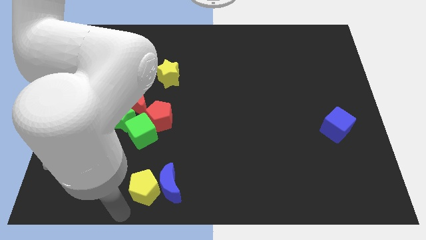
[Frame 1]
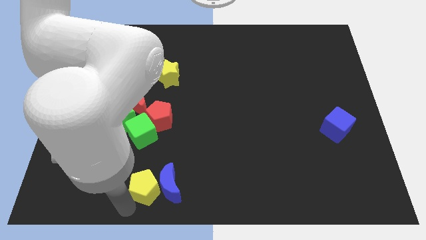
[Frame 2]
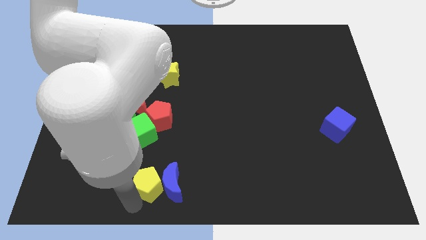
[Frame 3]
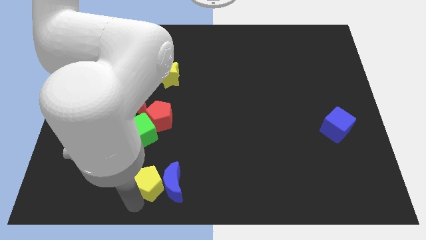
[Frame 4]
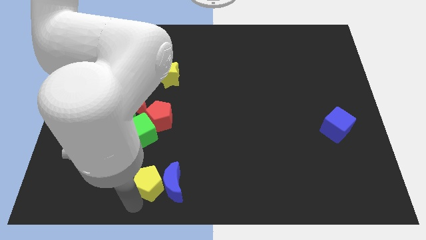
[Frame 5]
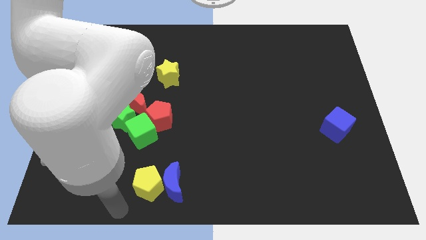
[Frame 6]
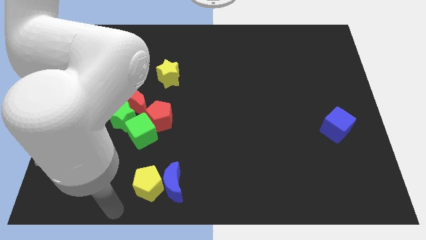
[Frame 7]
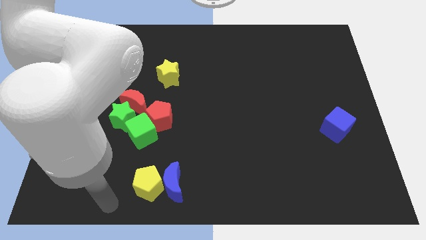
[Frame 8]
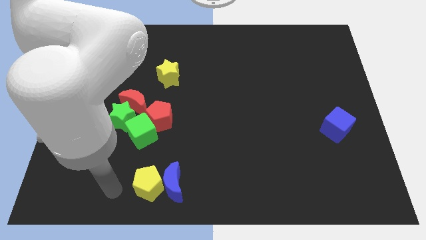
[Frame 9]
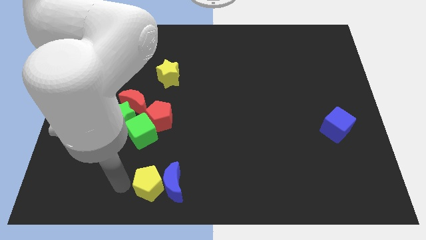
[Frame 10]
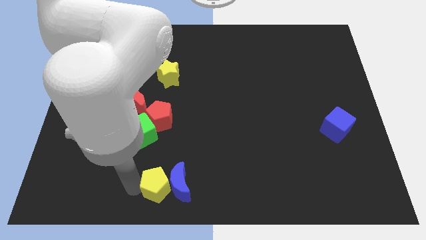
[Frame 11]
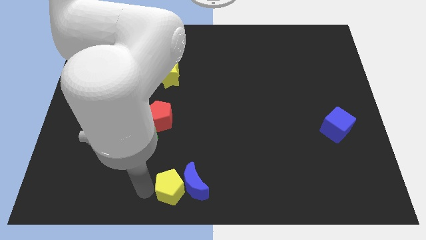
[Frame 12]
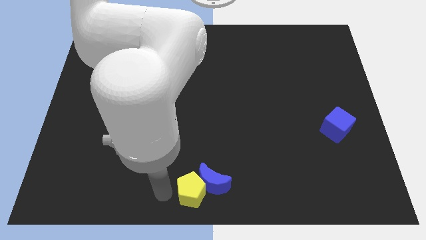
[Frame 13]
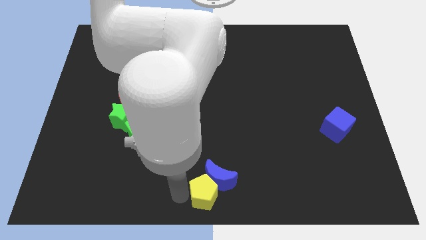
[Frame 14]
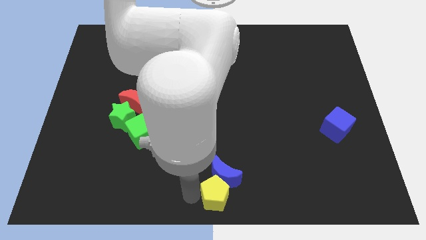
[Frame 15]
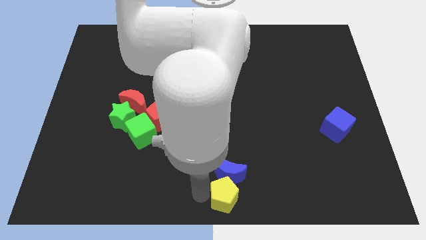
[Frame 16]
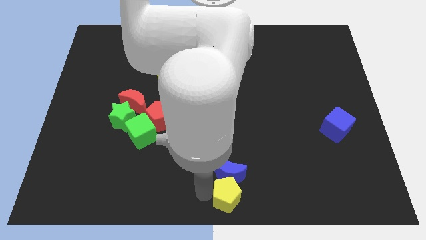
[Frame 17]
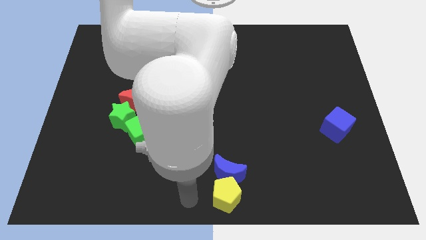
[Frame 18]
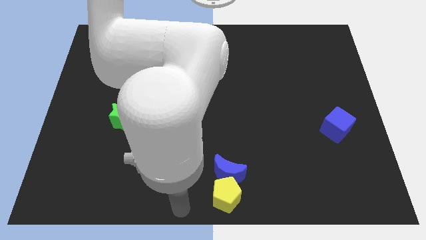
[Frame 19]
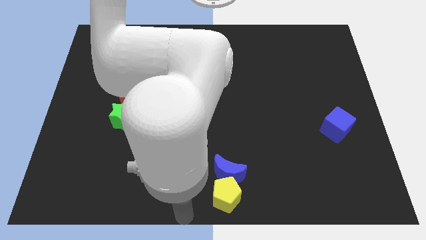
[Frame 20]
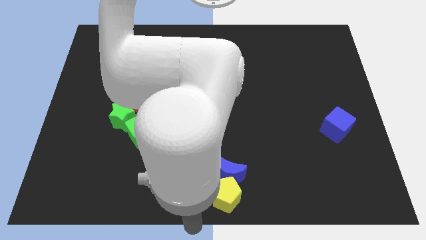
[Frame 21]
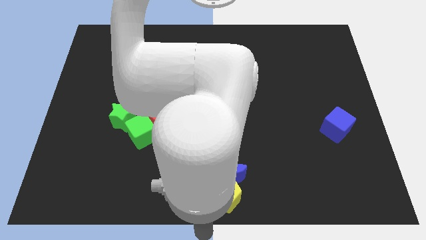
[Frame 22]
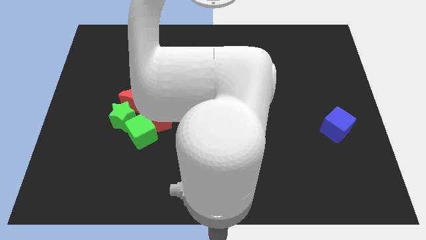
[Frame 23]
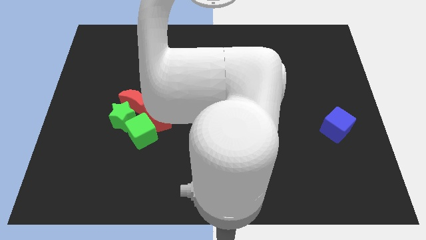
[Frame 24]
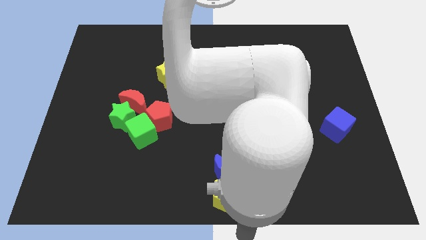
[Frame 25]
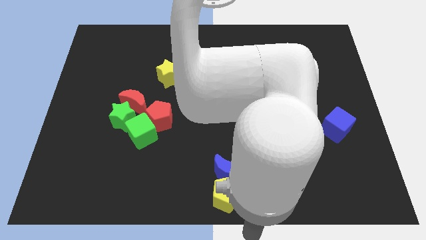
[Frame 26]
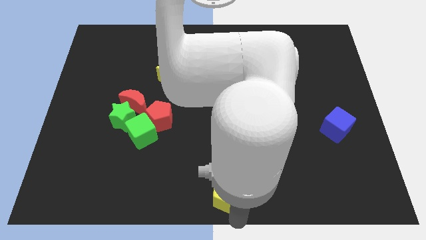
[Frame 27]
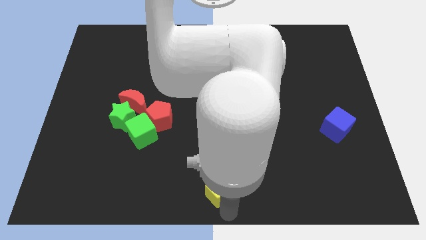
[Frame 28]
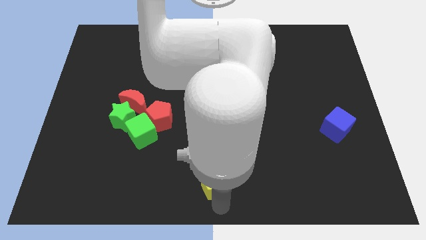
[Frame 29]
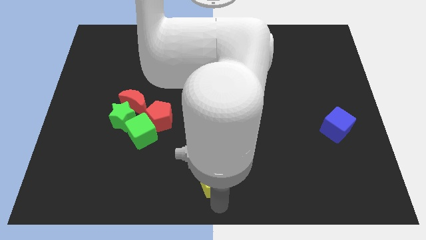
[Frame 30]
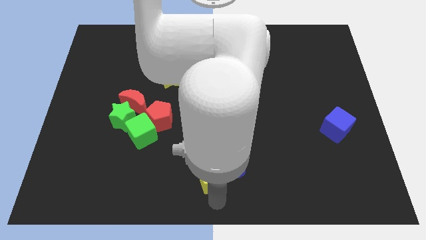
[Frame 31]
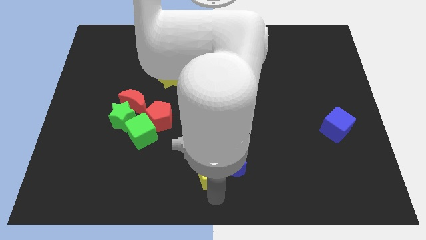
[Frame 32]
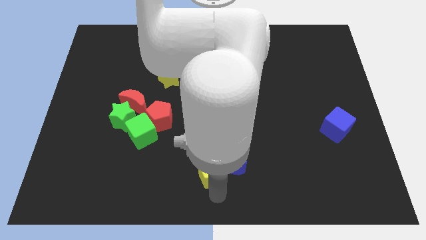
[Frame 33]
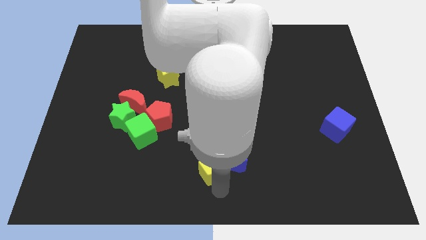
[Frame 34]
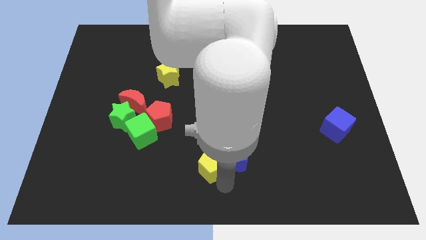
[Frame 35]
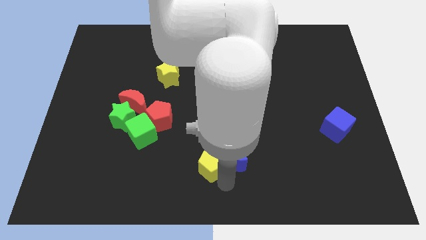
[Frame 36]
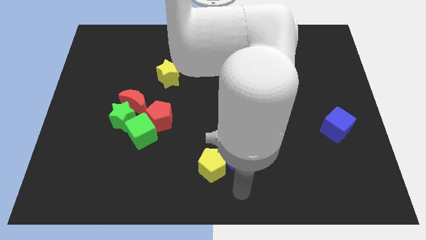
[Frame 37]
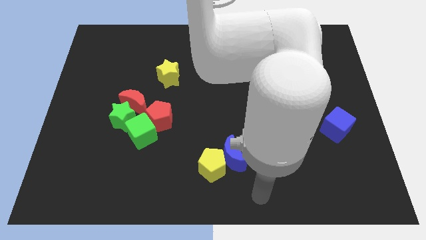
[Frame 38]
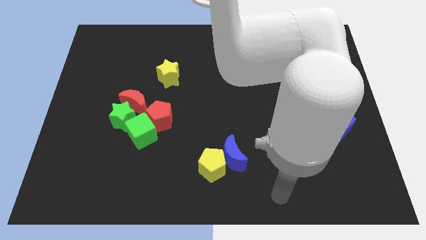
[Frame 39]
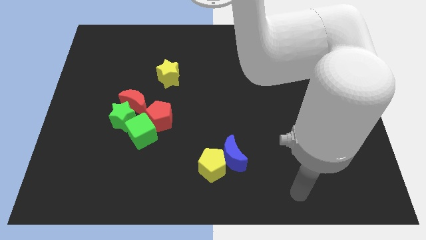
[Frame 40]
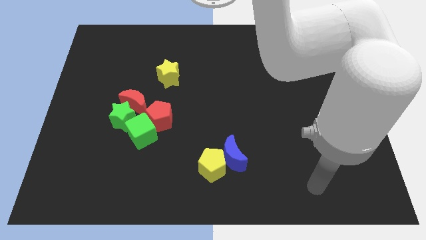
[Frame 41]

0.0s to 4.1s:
place the yellow pentagon and blue crescent at the bottom center of the board

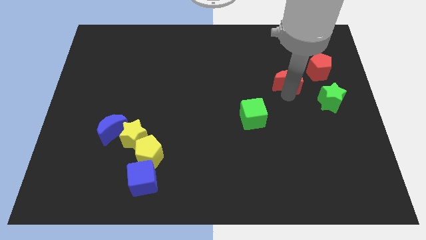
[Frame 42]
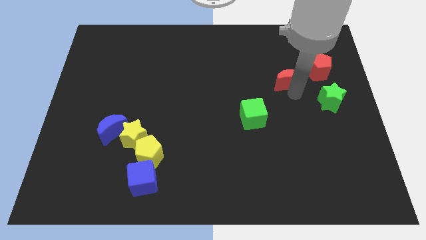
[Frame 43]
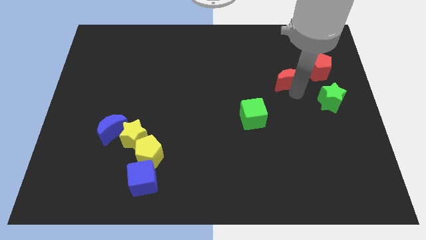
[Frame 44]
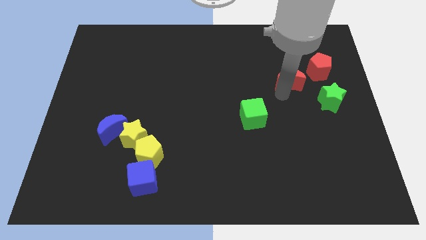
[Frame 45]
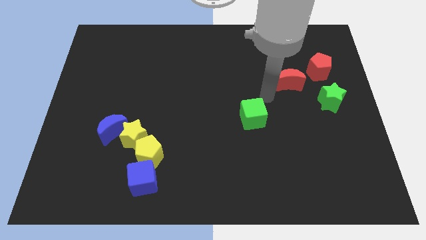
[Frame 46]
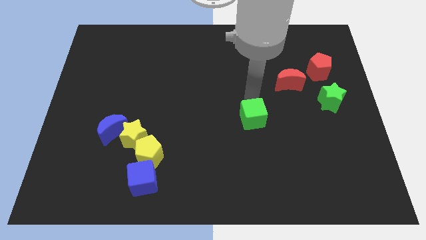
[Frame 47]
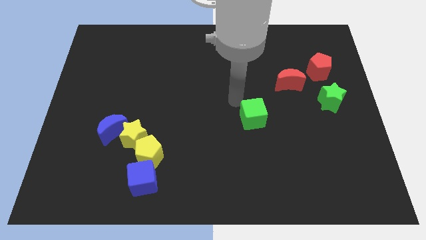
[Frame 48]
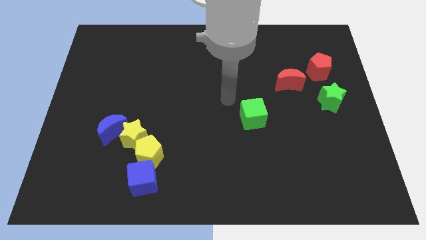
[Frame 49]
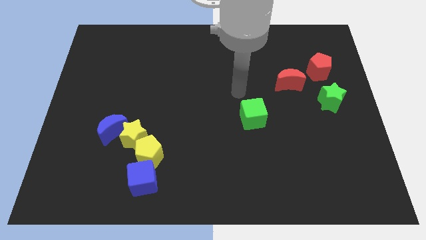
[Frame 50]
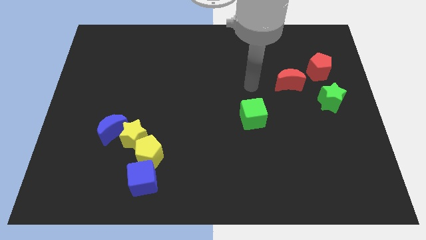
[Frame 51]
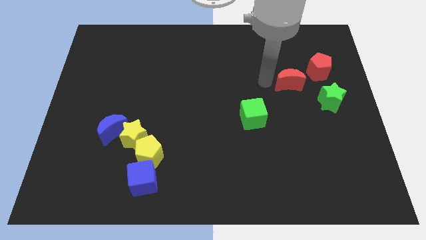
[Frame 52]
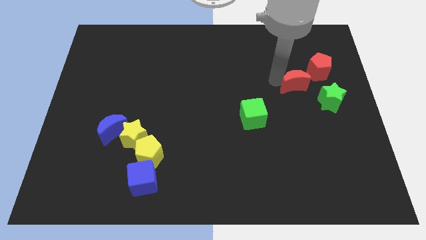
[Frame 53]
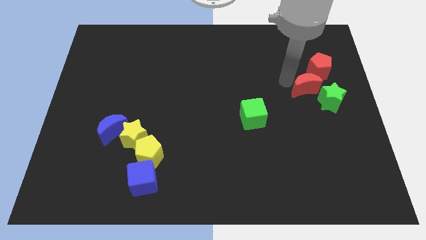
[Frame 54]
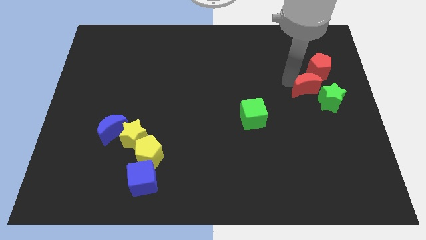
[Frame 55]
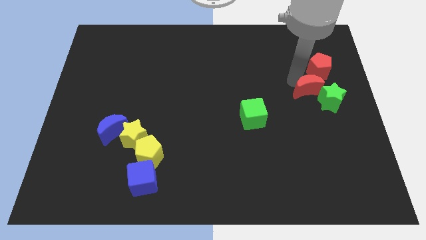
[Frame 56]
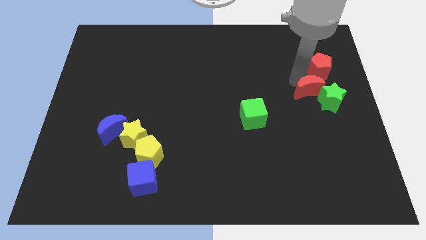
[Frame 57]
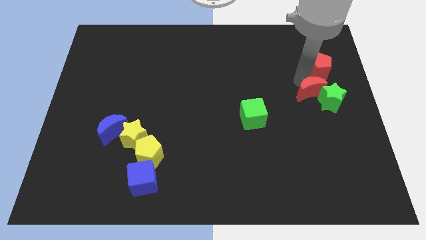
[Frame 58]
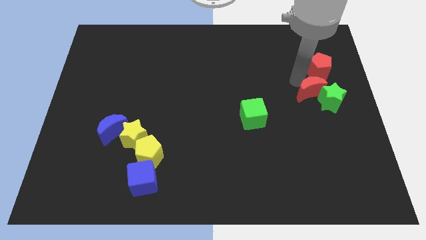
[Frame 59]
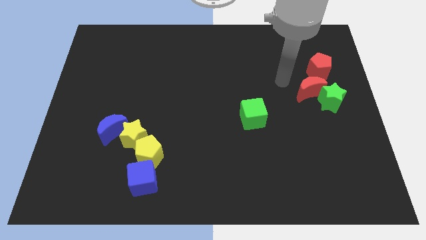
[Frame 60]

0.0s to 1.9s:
push the red moon into the green star

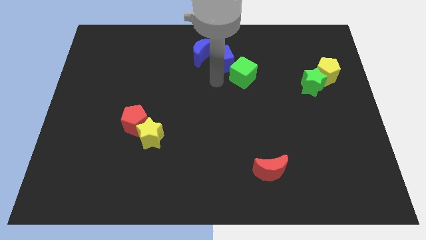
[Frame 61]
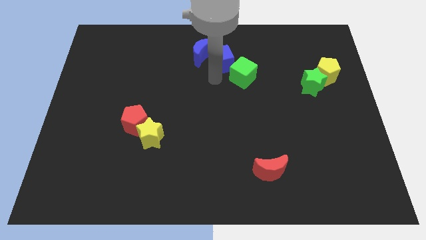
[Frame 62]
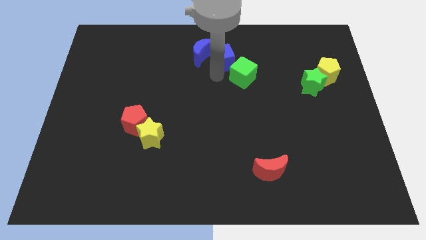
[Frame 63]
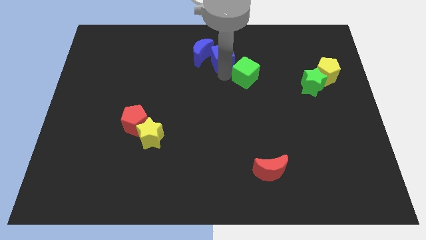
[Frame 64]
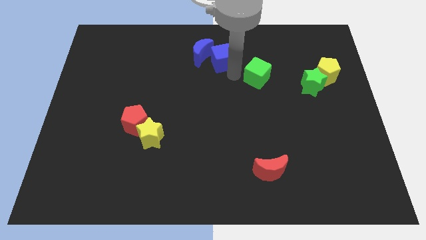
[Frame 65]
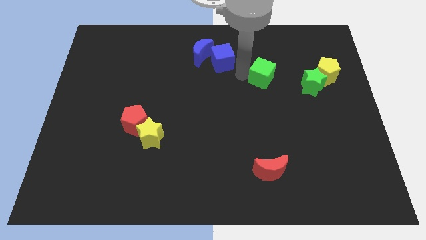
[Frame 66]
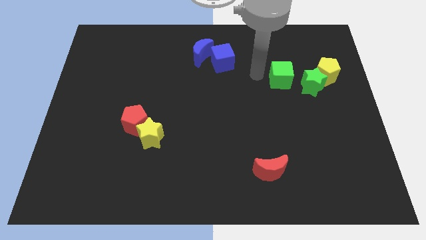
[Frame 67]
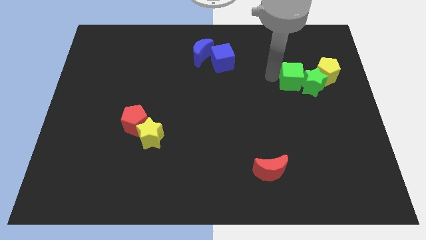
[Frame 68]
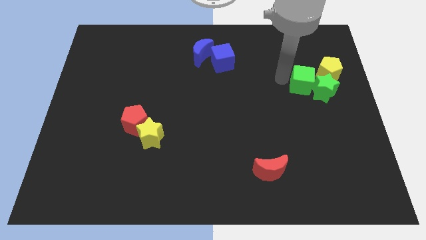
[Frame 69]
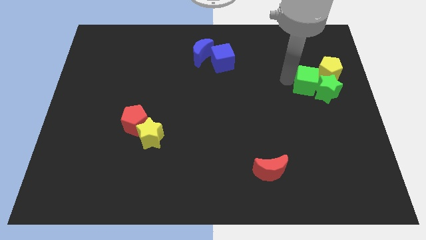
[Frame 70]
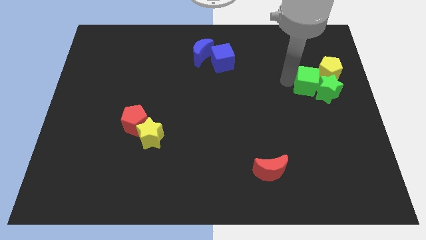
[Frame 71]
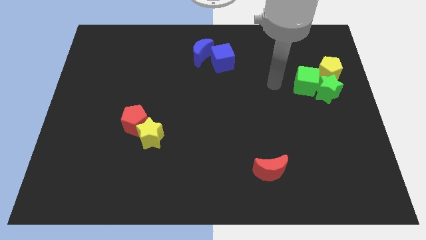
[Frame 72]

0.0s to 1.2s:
push the green cube into the green star

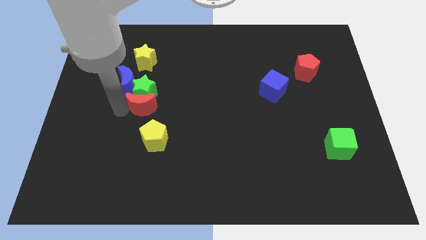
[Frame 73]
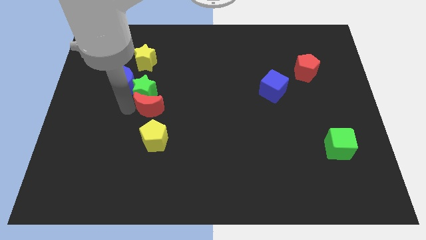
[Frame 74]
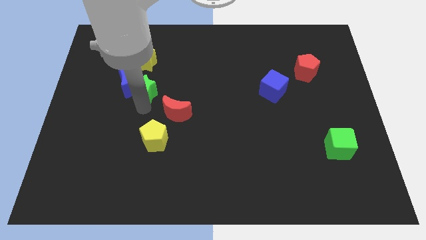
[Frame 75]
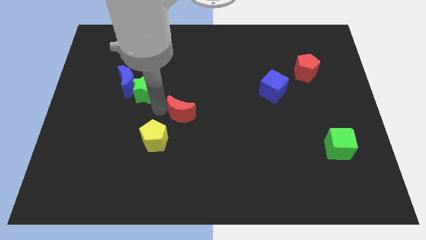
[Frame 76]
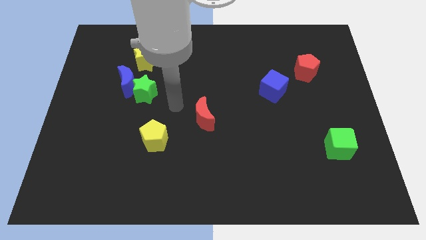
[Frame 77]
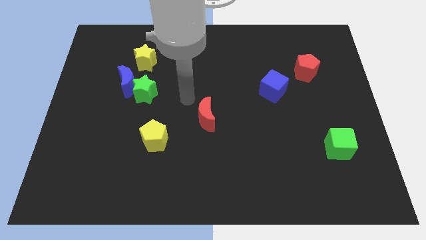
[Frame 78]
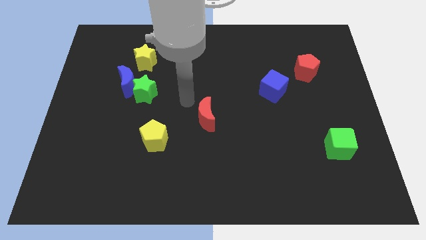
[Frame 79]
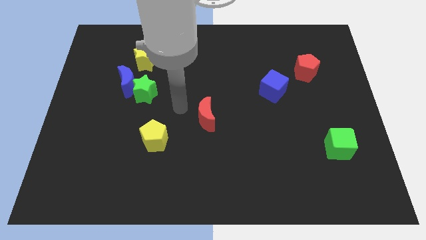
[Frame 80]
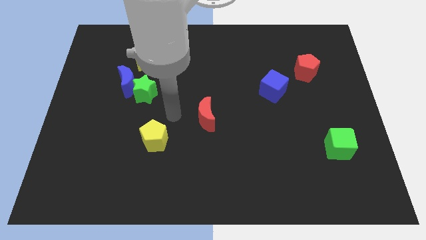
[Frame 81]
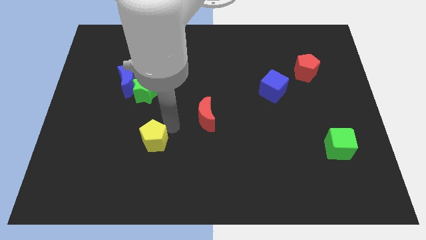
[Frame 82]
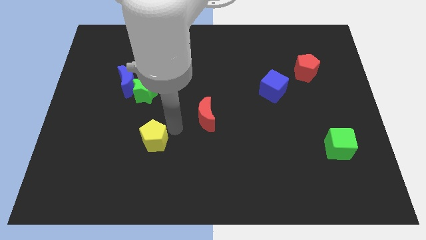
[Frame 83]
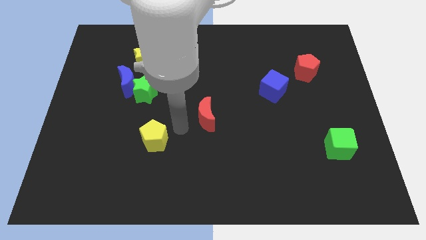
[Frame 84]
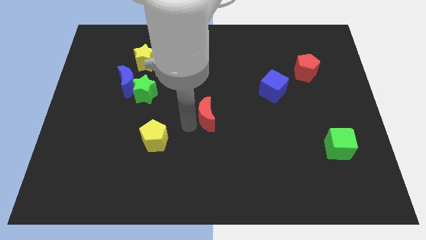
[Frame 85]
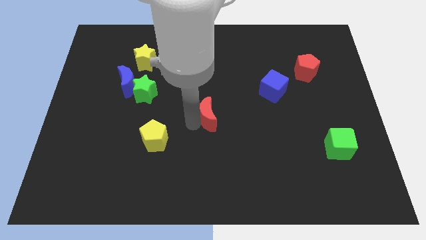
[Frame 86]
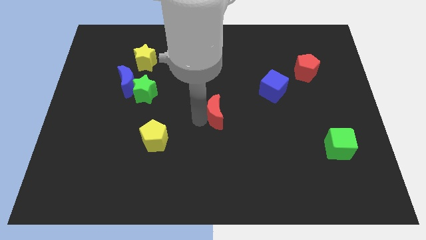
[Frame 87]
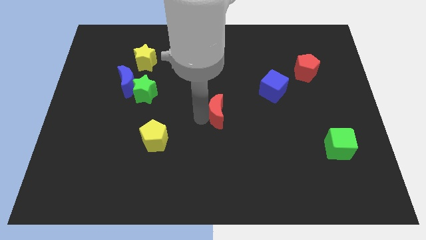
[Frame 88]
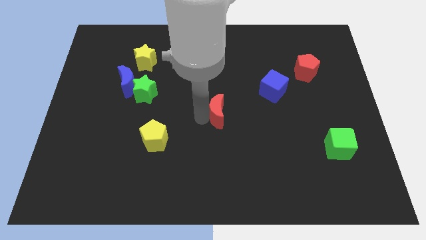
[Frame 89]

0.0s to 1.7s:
push the red moon towards the center

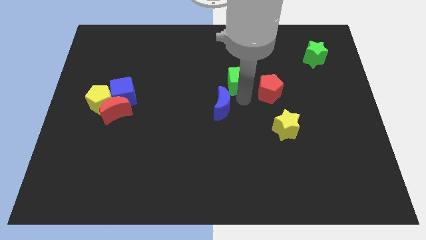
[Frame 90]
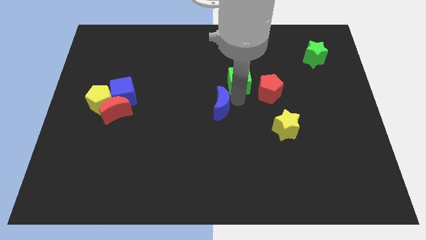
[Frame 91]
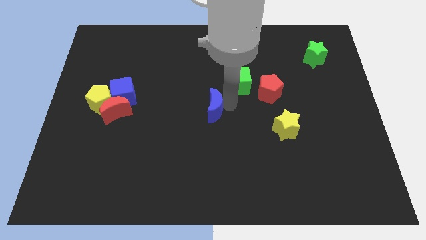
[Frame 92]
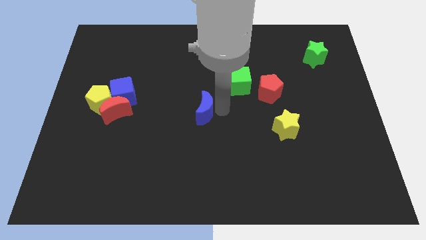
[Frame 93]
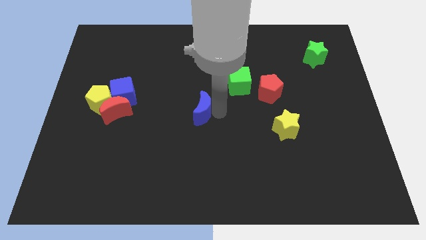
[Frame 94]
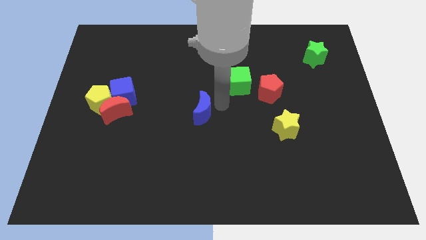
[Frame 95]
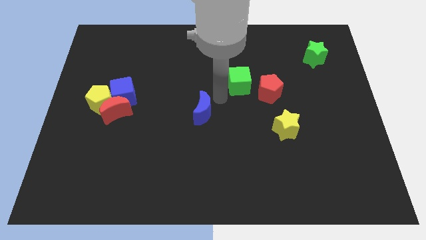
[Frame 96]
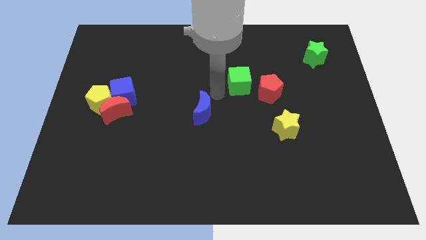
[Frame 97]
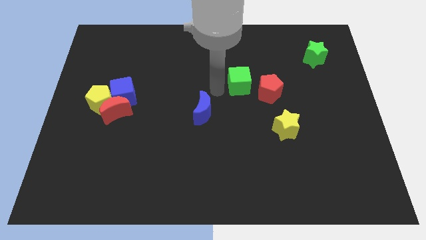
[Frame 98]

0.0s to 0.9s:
push the blue moon towards the blue cube
